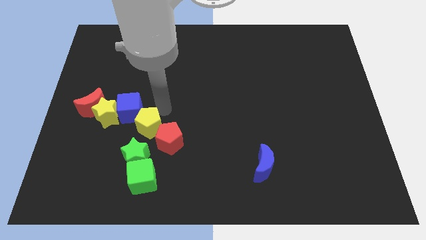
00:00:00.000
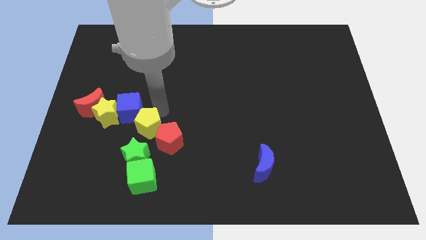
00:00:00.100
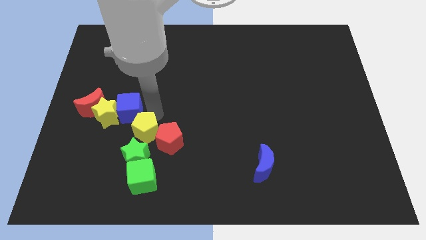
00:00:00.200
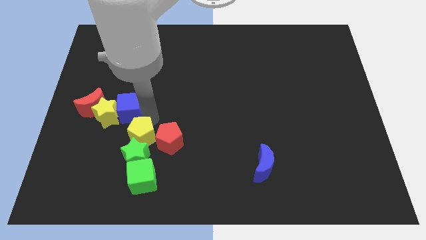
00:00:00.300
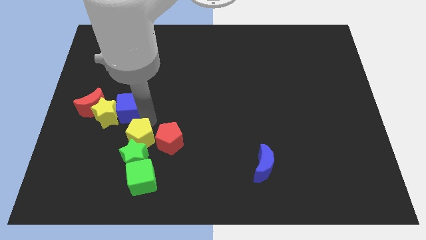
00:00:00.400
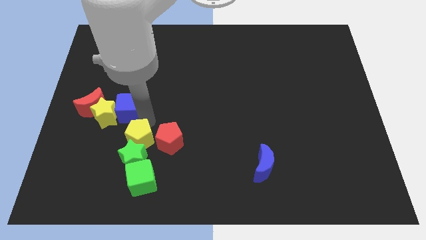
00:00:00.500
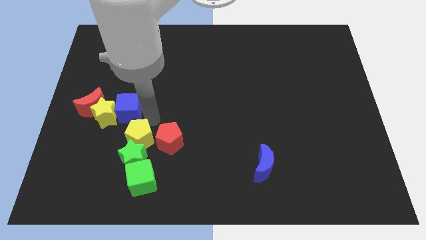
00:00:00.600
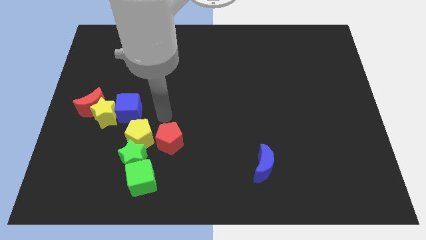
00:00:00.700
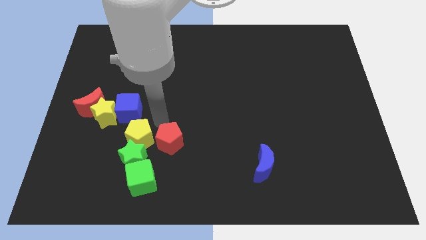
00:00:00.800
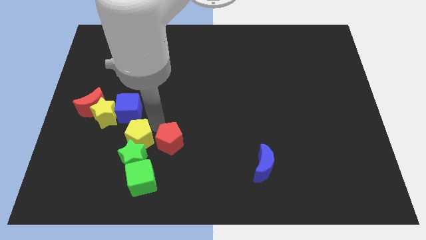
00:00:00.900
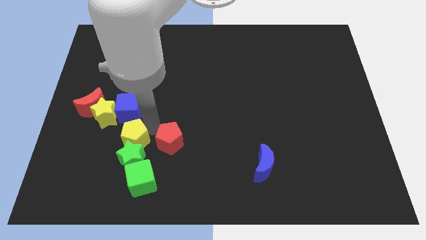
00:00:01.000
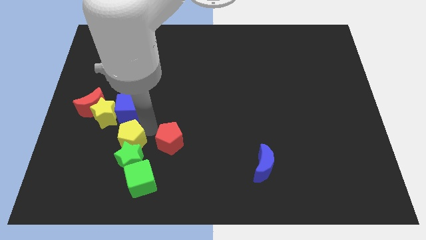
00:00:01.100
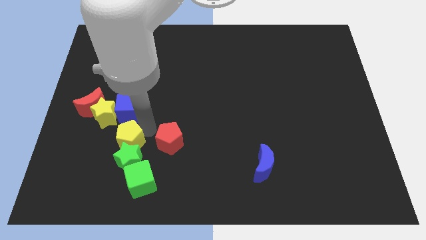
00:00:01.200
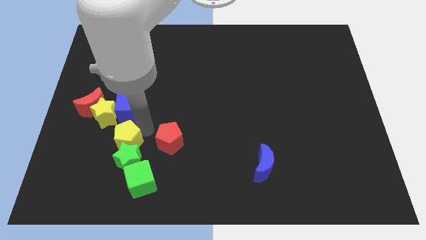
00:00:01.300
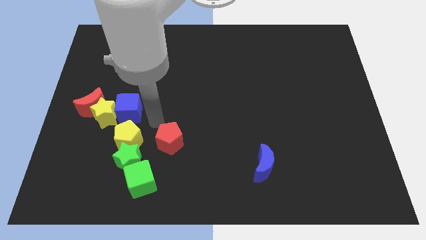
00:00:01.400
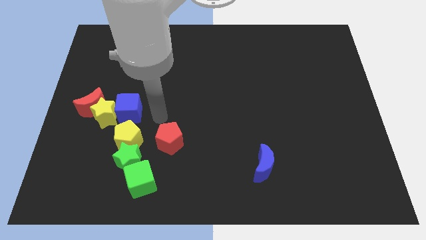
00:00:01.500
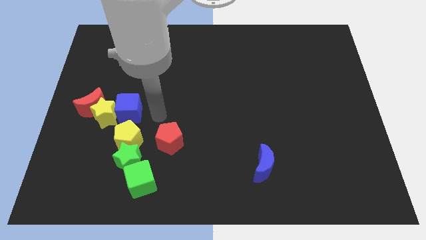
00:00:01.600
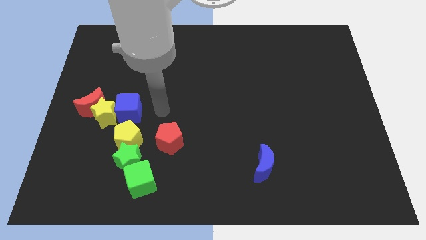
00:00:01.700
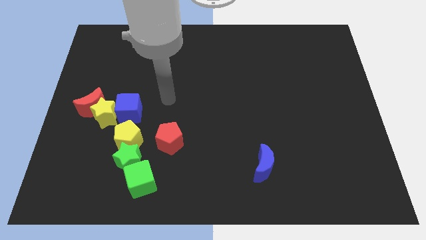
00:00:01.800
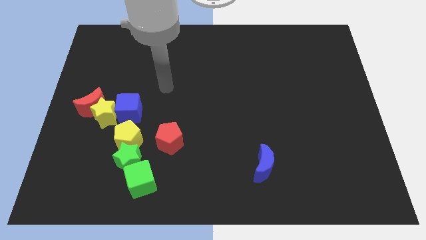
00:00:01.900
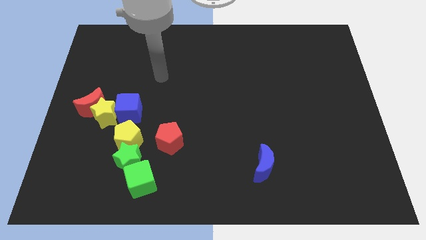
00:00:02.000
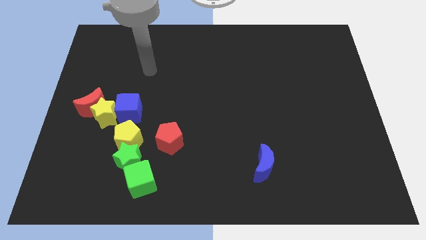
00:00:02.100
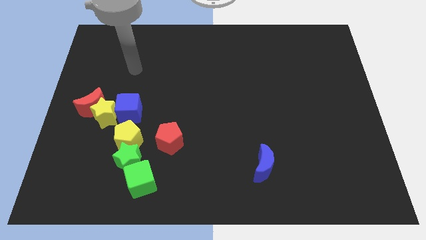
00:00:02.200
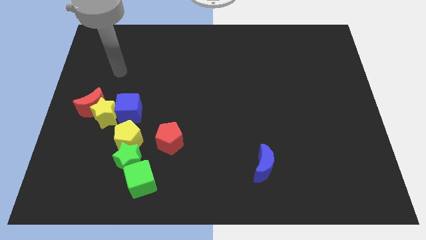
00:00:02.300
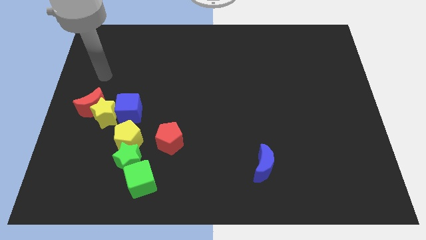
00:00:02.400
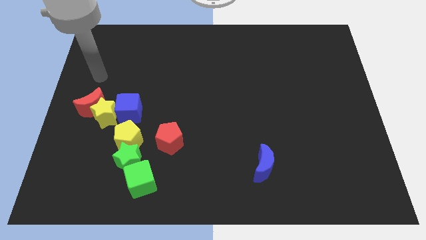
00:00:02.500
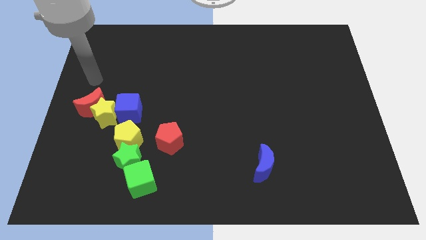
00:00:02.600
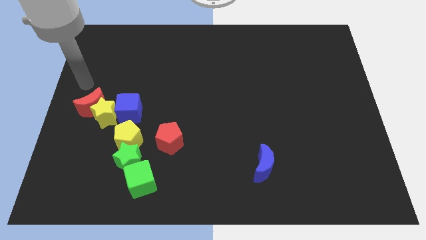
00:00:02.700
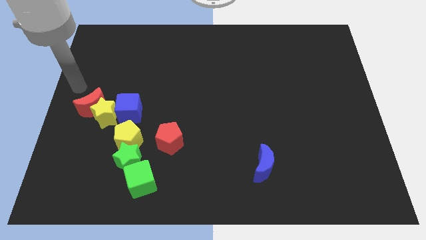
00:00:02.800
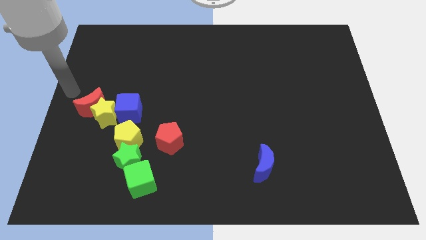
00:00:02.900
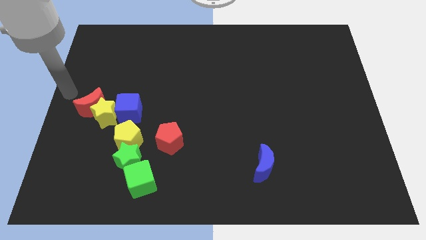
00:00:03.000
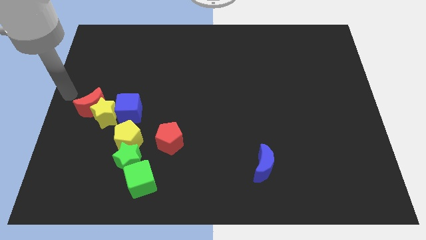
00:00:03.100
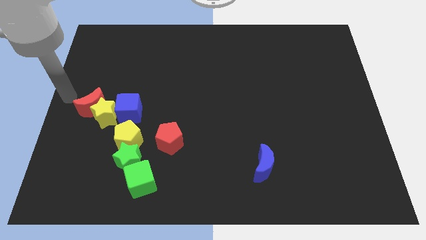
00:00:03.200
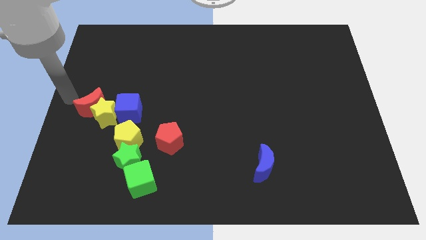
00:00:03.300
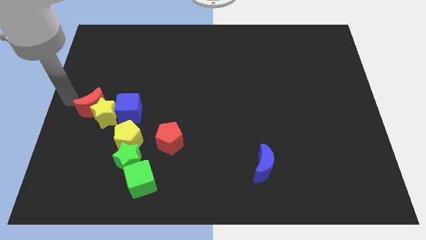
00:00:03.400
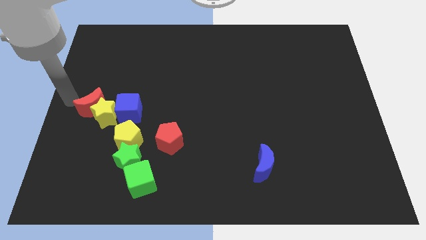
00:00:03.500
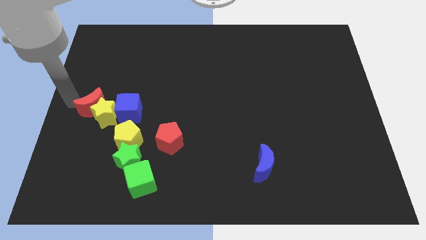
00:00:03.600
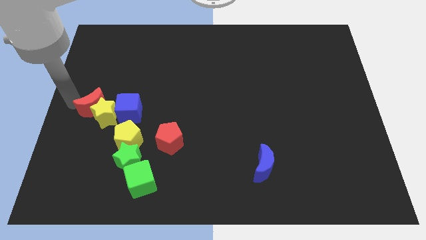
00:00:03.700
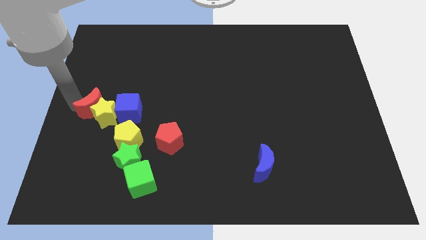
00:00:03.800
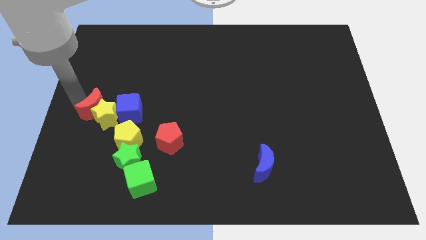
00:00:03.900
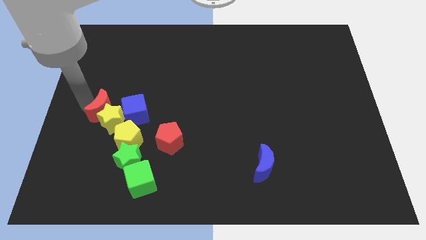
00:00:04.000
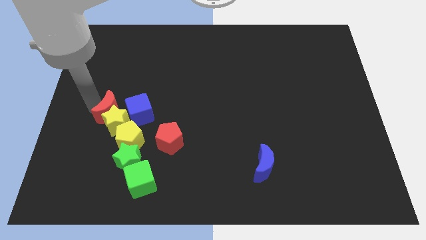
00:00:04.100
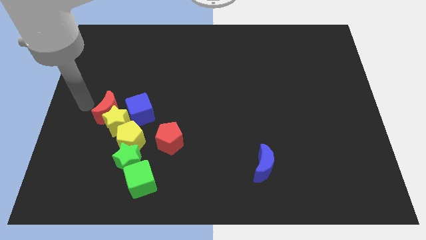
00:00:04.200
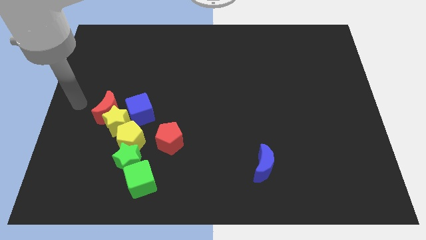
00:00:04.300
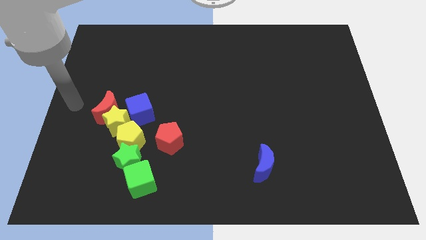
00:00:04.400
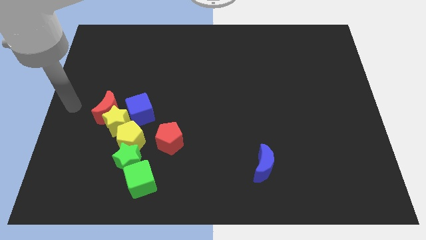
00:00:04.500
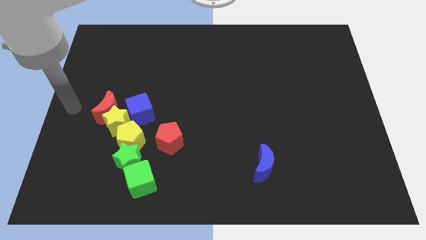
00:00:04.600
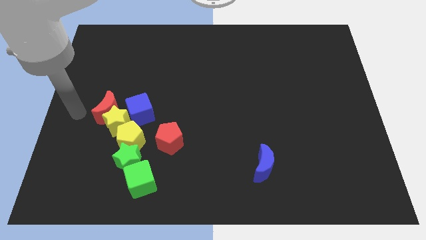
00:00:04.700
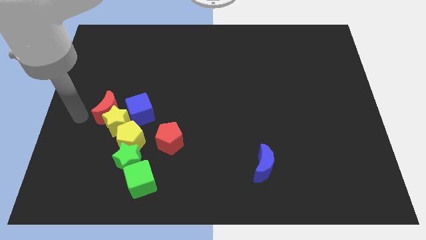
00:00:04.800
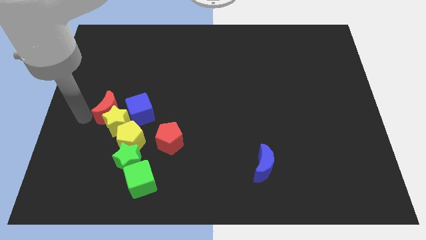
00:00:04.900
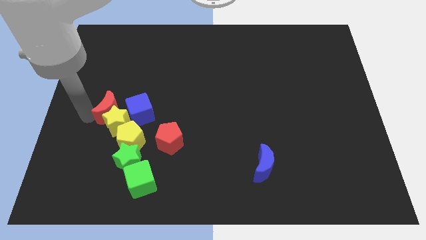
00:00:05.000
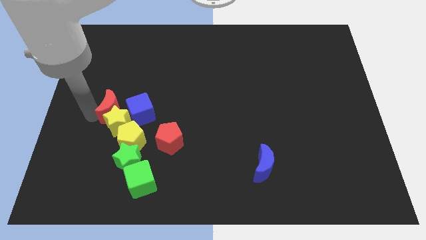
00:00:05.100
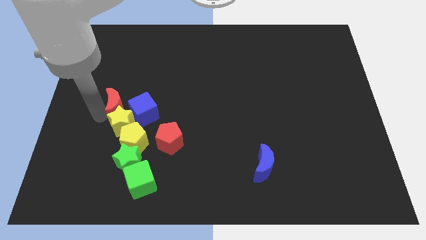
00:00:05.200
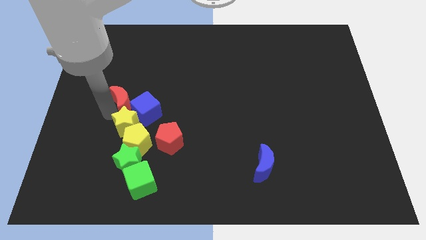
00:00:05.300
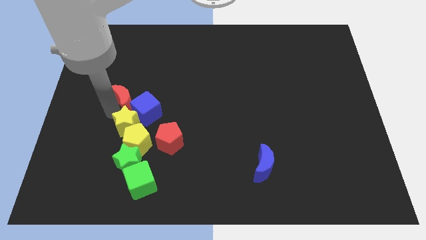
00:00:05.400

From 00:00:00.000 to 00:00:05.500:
group up all the blocks at the left side of the table except the blue moon

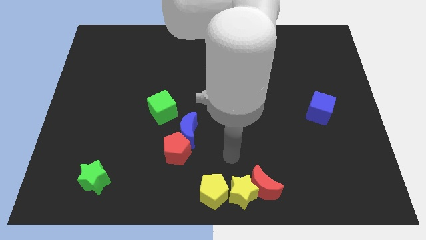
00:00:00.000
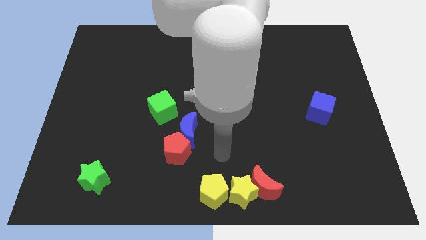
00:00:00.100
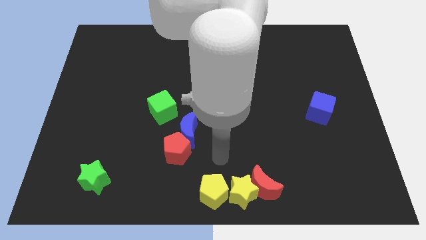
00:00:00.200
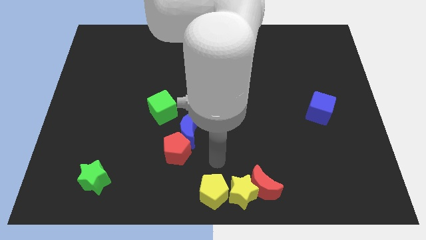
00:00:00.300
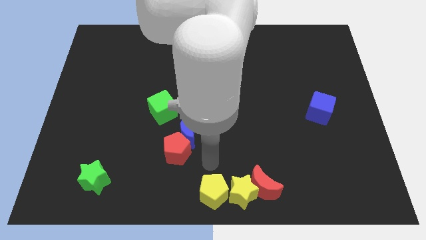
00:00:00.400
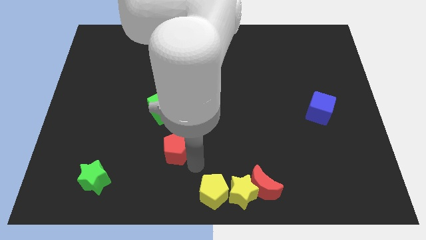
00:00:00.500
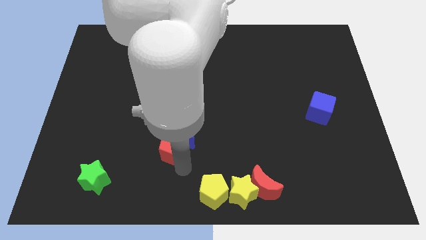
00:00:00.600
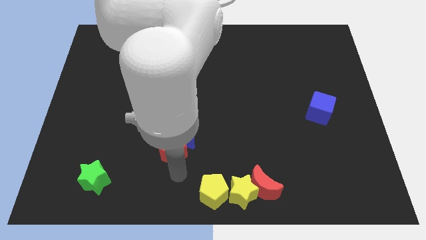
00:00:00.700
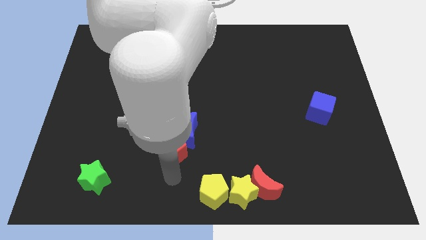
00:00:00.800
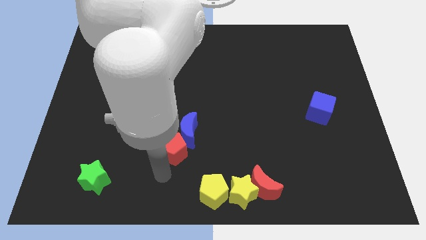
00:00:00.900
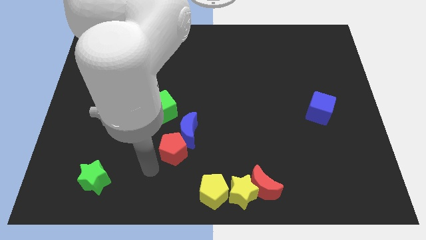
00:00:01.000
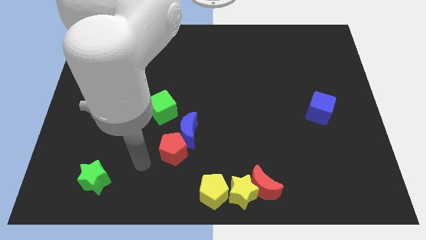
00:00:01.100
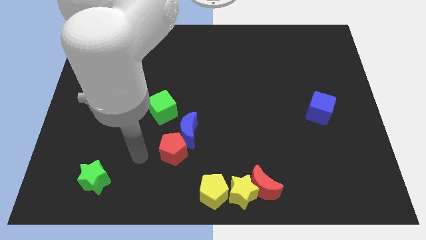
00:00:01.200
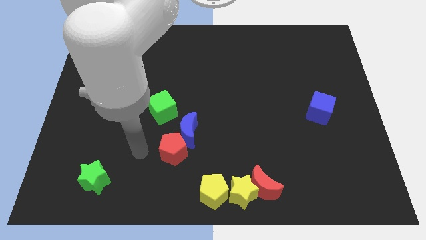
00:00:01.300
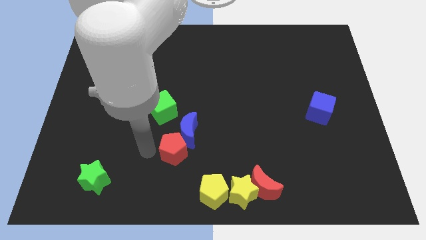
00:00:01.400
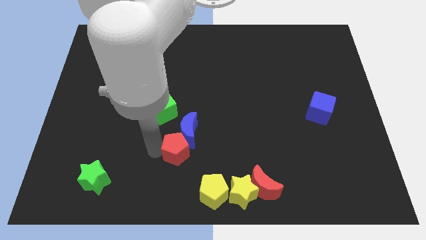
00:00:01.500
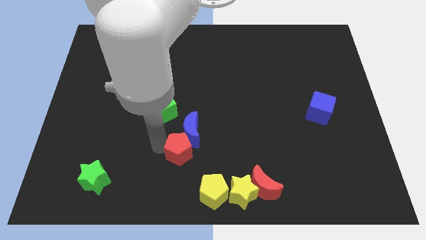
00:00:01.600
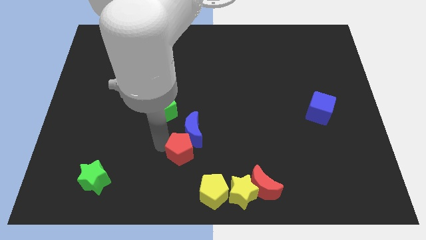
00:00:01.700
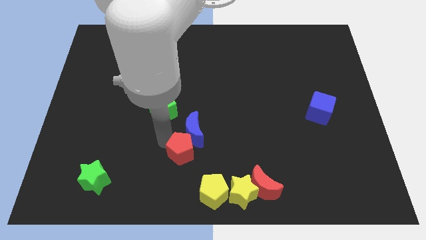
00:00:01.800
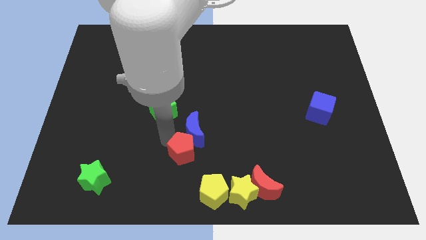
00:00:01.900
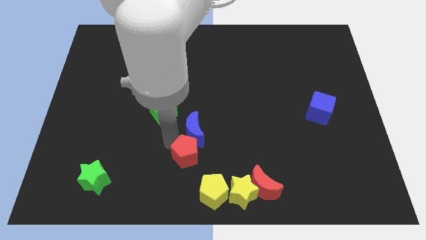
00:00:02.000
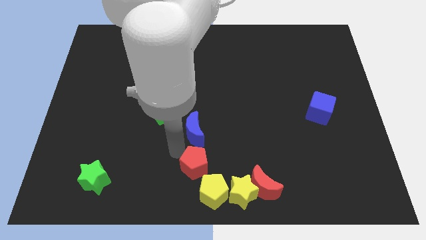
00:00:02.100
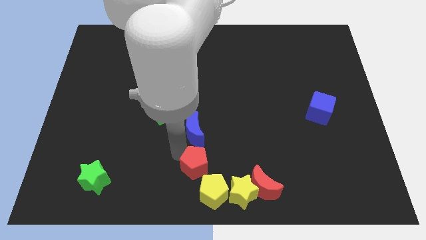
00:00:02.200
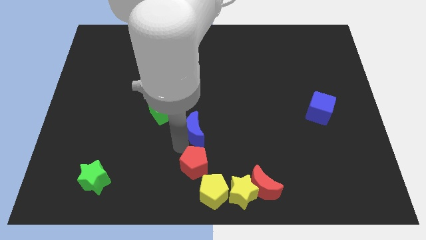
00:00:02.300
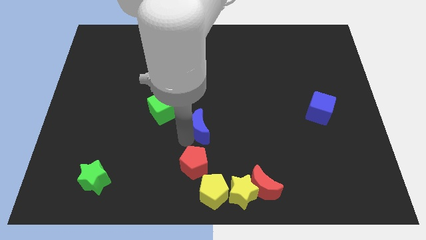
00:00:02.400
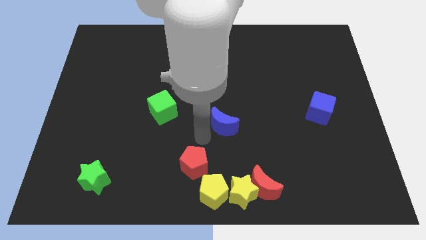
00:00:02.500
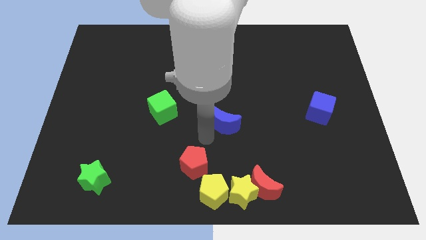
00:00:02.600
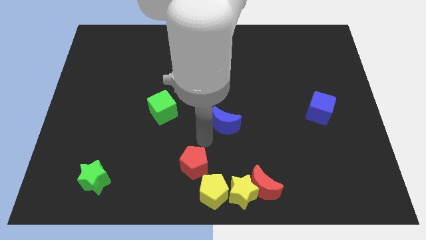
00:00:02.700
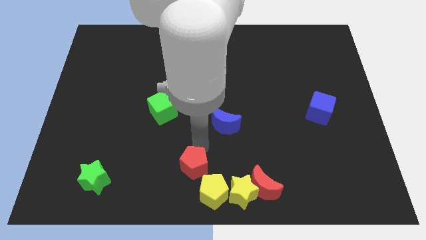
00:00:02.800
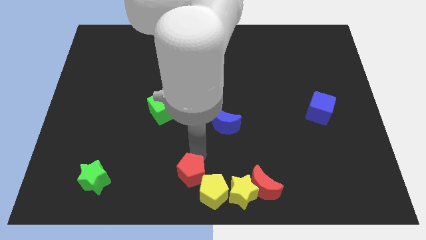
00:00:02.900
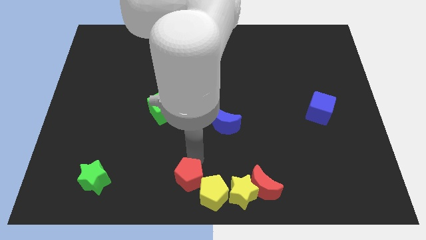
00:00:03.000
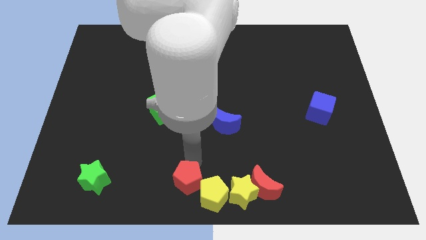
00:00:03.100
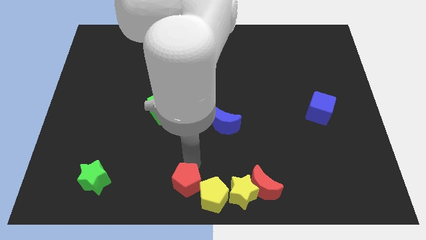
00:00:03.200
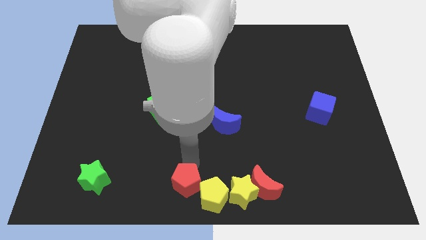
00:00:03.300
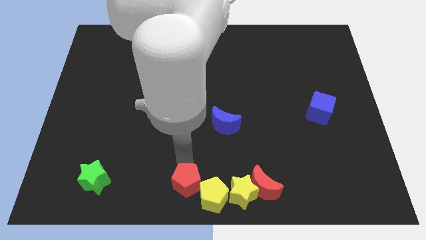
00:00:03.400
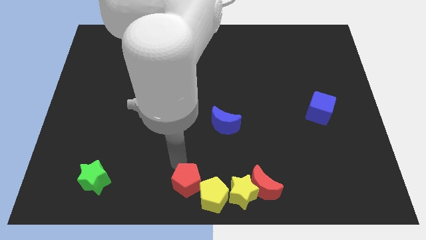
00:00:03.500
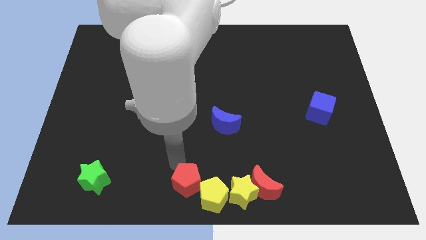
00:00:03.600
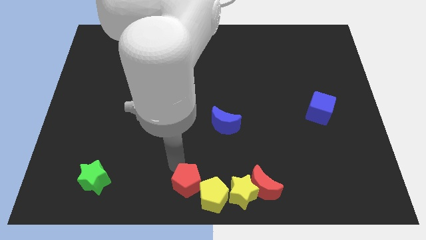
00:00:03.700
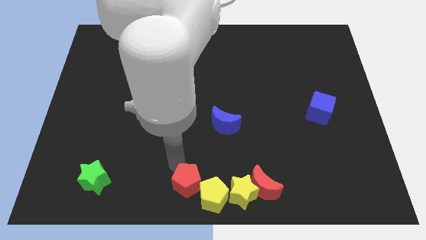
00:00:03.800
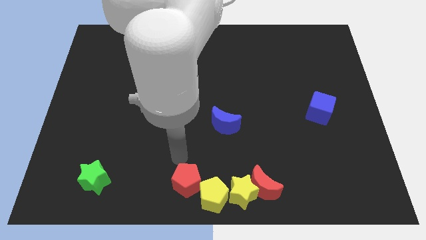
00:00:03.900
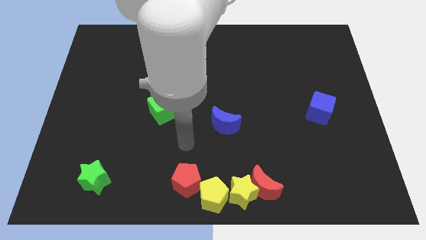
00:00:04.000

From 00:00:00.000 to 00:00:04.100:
touch the yellow pentagon with the red pentagon
